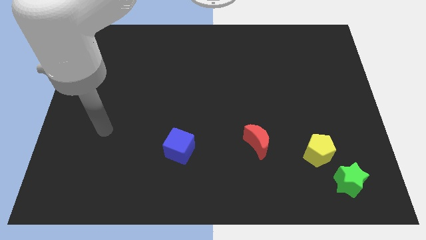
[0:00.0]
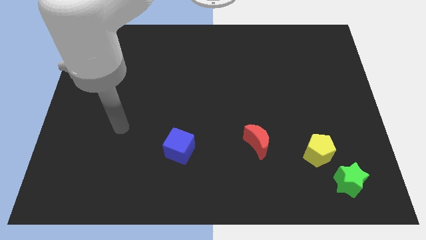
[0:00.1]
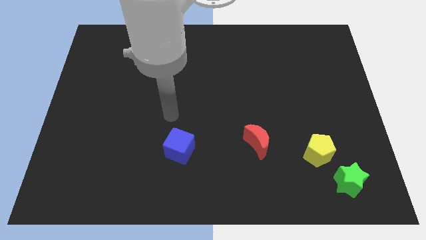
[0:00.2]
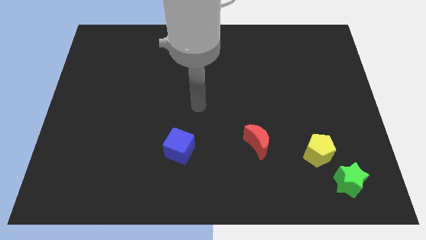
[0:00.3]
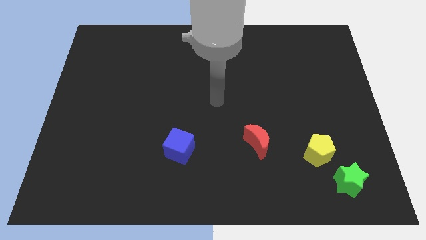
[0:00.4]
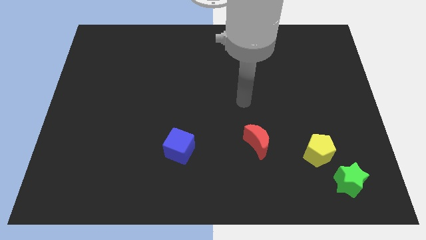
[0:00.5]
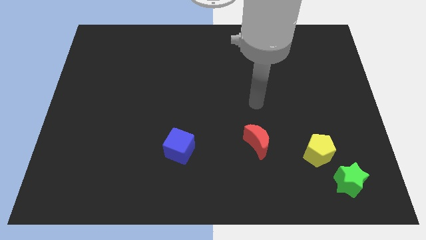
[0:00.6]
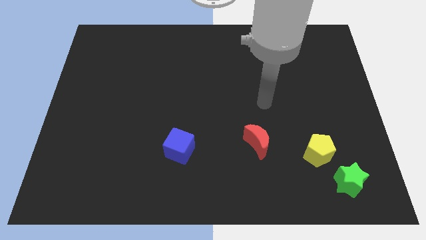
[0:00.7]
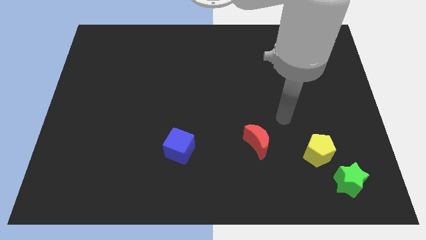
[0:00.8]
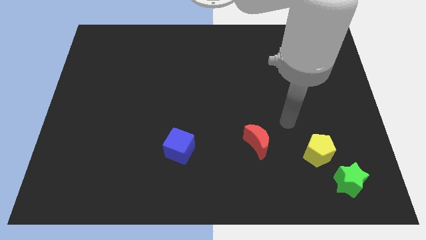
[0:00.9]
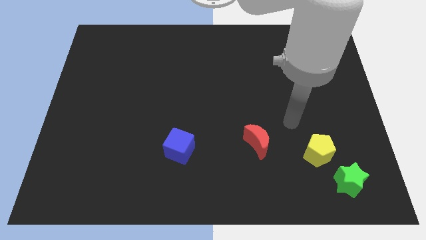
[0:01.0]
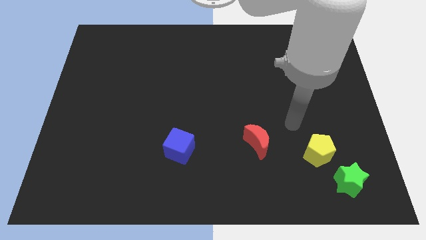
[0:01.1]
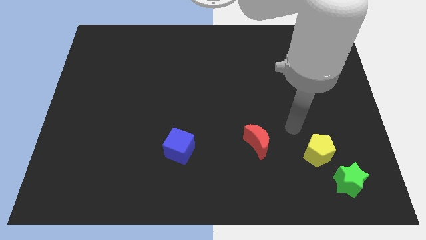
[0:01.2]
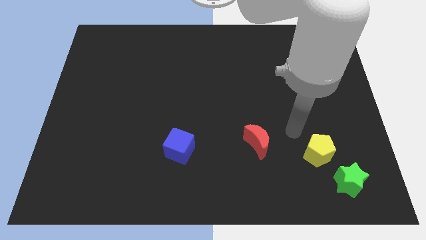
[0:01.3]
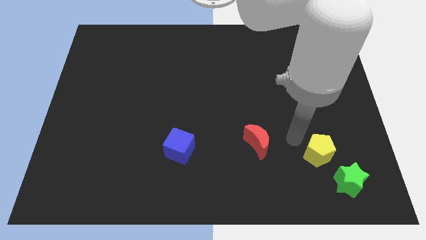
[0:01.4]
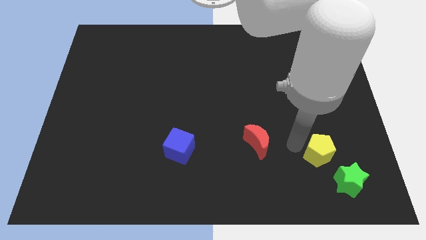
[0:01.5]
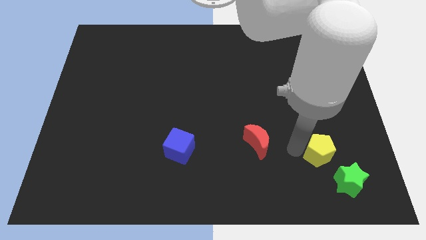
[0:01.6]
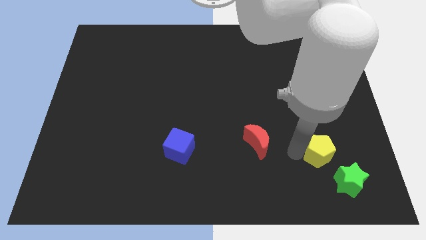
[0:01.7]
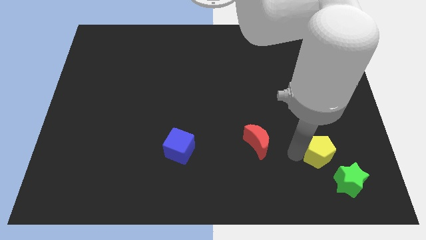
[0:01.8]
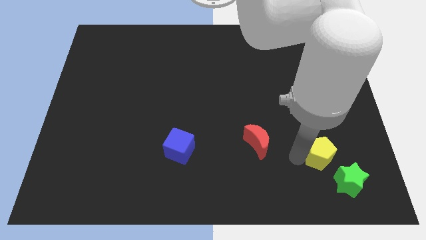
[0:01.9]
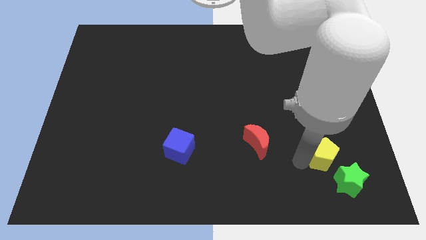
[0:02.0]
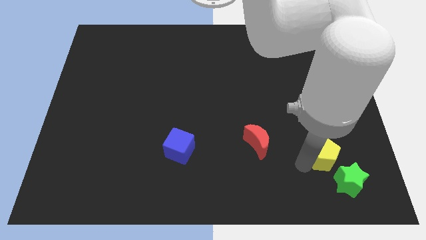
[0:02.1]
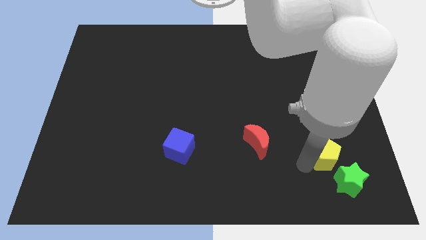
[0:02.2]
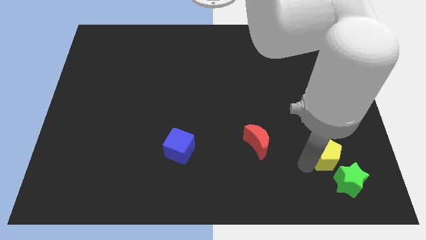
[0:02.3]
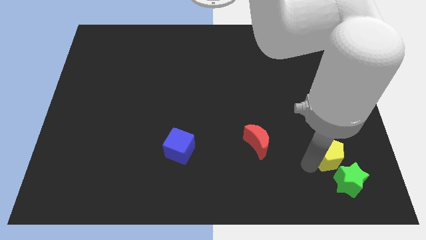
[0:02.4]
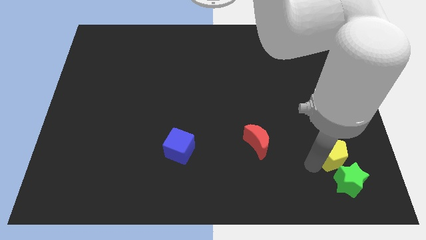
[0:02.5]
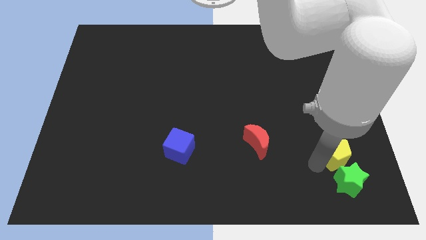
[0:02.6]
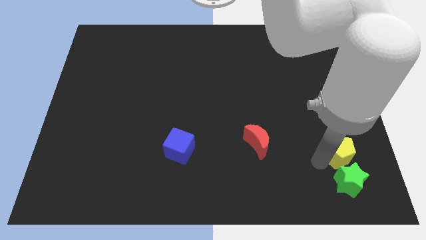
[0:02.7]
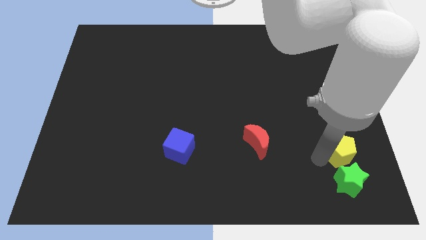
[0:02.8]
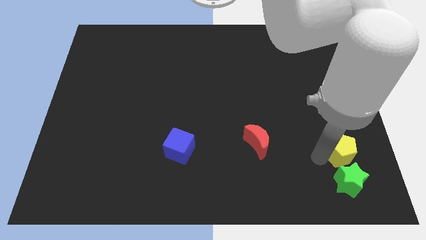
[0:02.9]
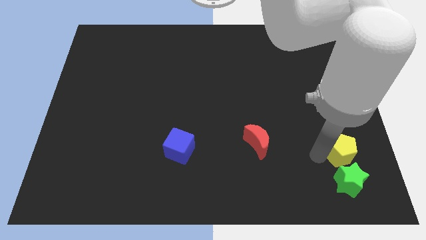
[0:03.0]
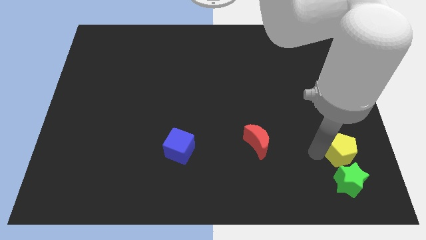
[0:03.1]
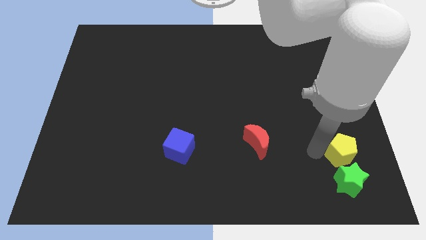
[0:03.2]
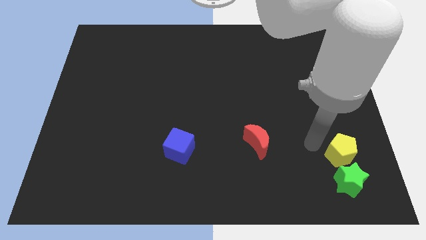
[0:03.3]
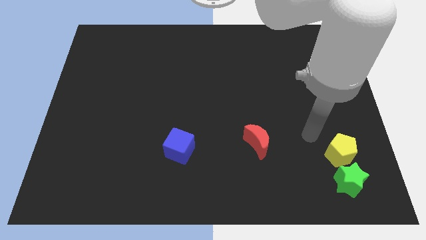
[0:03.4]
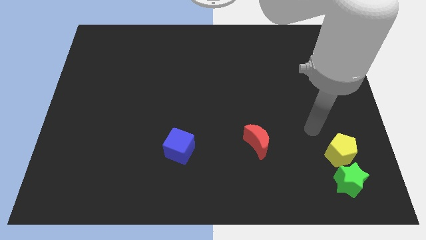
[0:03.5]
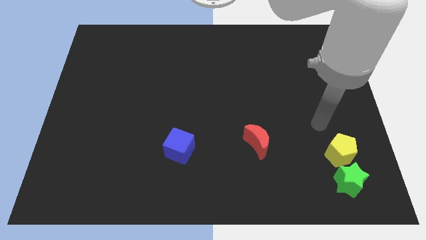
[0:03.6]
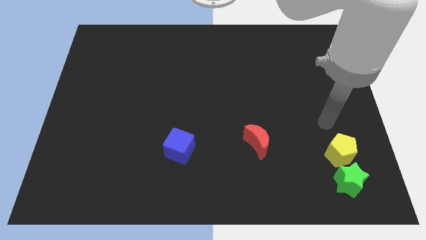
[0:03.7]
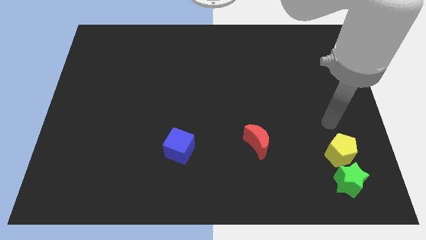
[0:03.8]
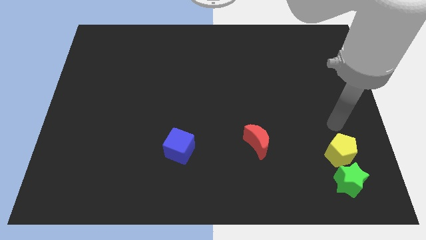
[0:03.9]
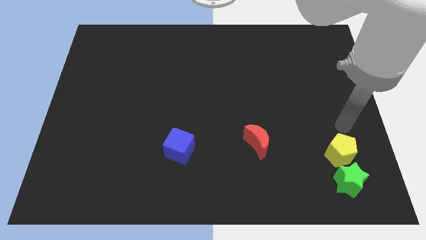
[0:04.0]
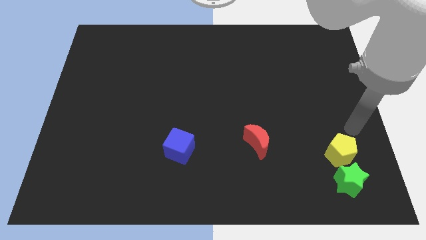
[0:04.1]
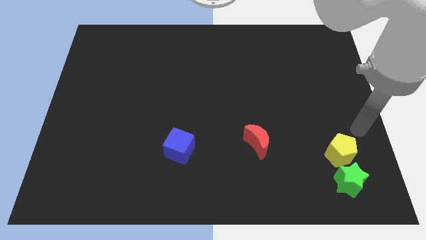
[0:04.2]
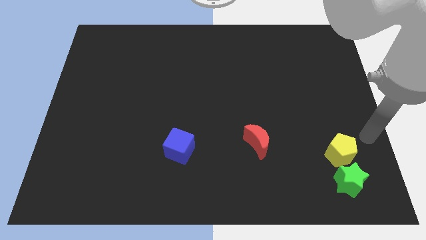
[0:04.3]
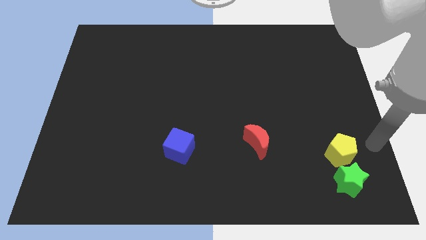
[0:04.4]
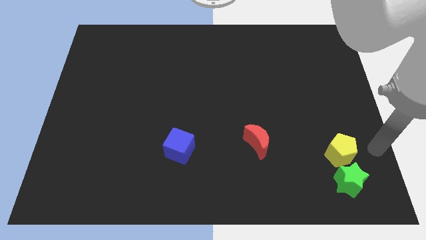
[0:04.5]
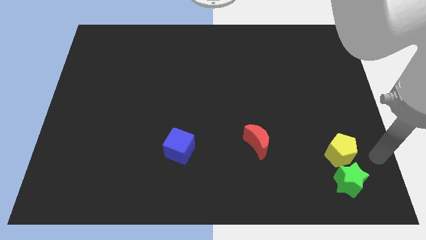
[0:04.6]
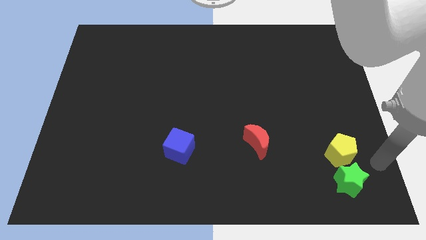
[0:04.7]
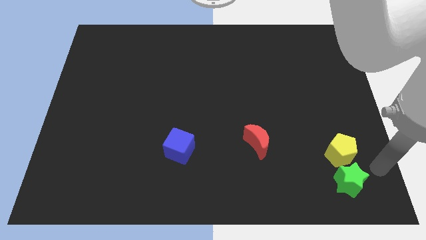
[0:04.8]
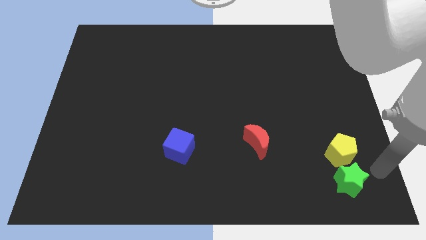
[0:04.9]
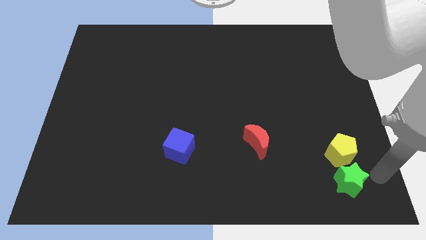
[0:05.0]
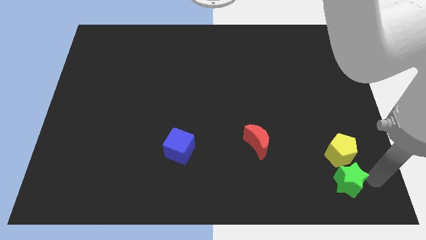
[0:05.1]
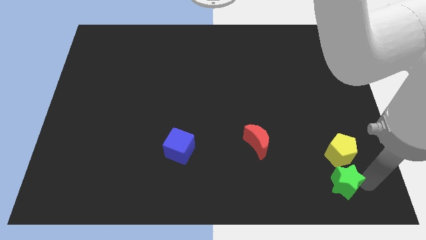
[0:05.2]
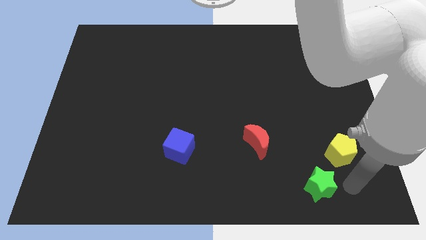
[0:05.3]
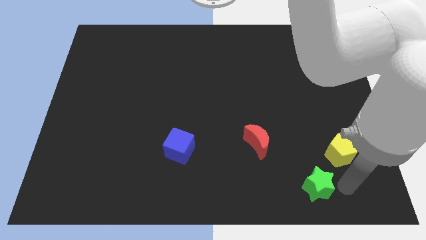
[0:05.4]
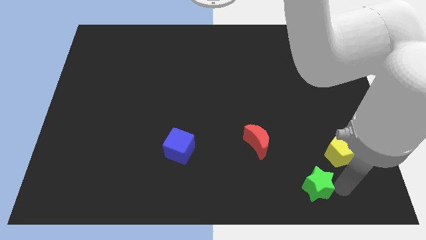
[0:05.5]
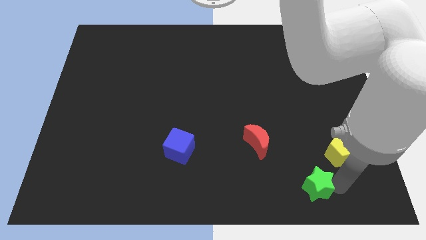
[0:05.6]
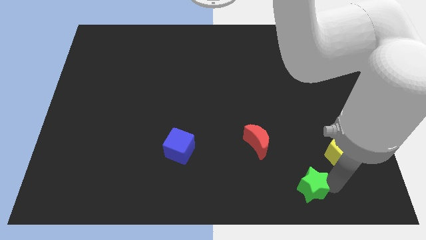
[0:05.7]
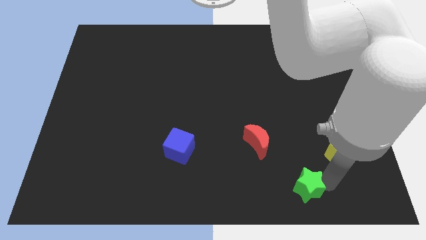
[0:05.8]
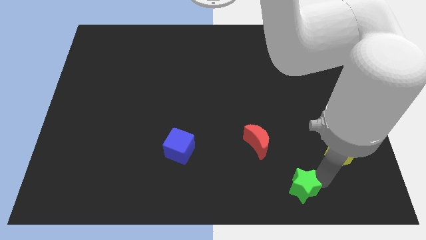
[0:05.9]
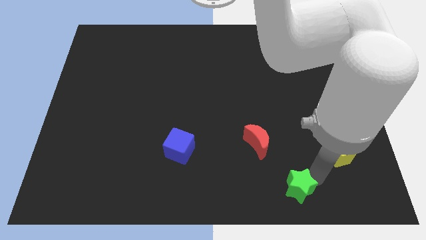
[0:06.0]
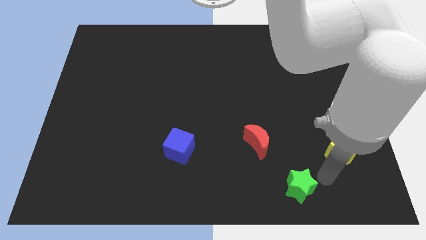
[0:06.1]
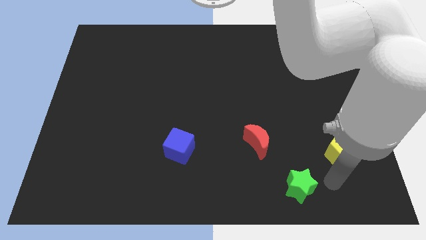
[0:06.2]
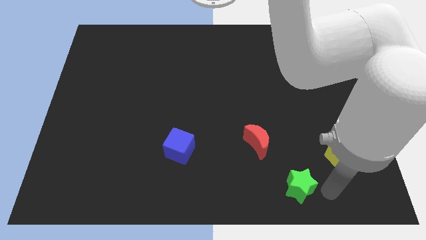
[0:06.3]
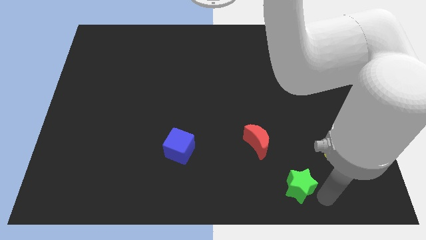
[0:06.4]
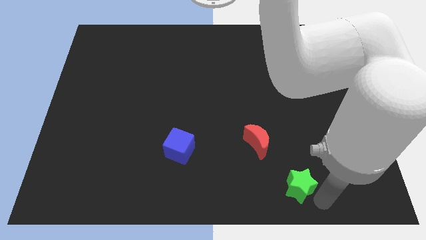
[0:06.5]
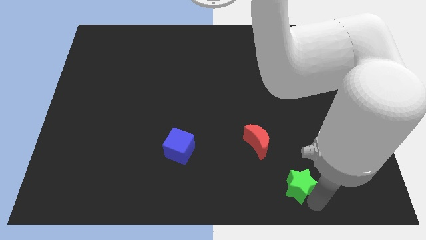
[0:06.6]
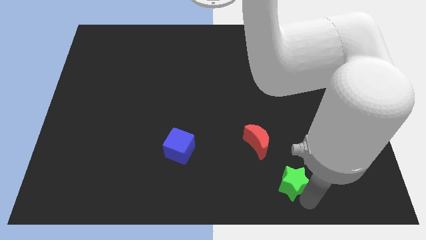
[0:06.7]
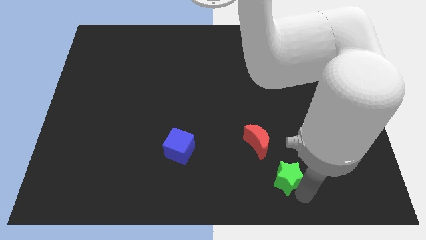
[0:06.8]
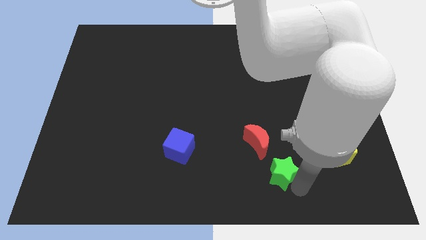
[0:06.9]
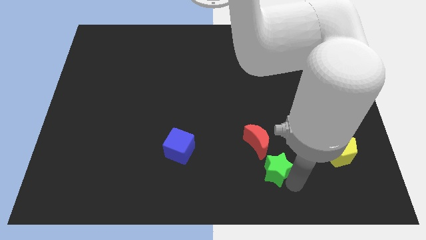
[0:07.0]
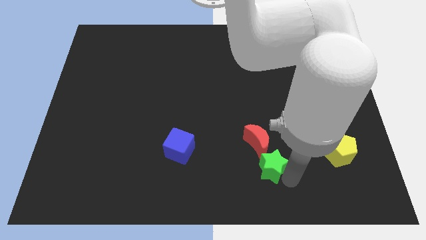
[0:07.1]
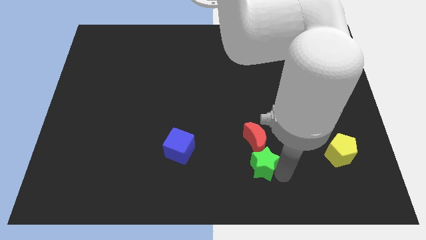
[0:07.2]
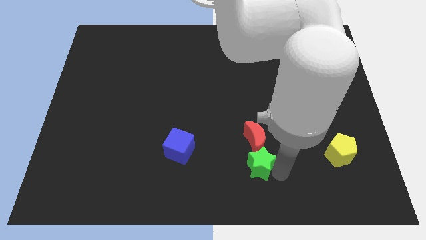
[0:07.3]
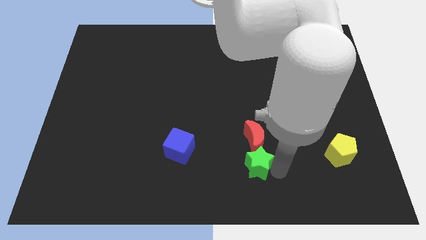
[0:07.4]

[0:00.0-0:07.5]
slide the green star to the moon

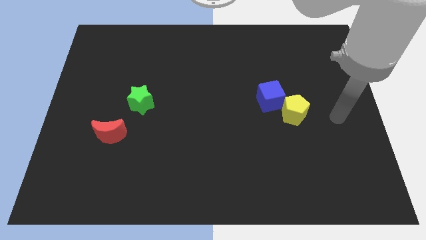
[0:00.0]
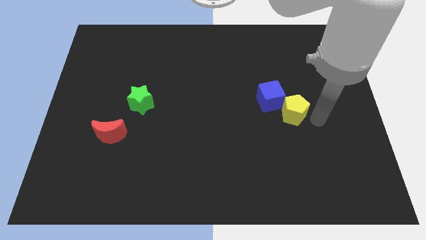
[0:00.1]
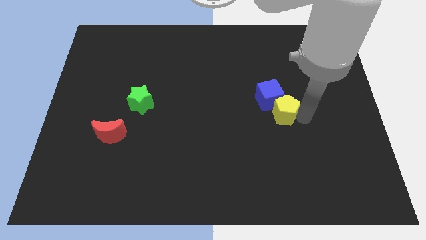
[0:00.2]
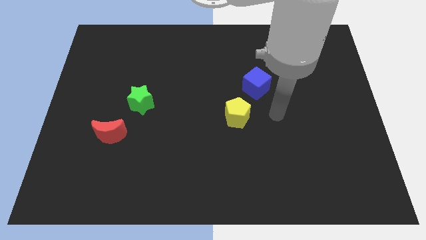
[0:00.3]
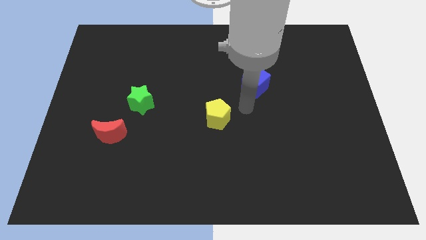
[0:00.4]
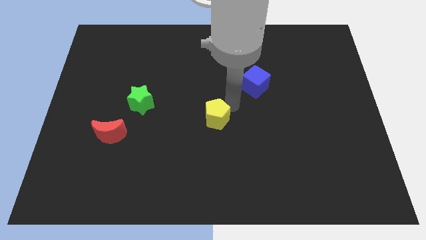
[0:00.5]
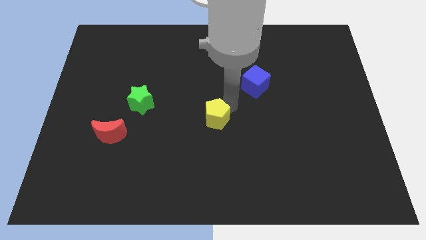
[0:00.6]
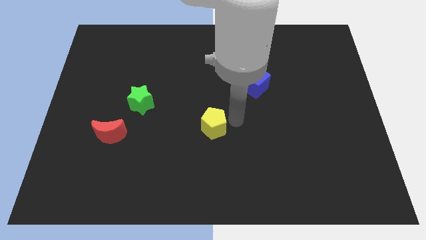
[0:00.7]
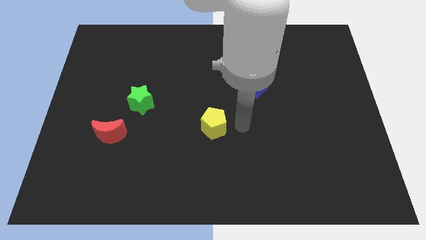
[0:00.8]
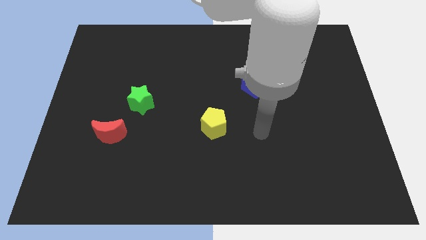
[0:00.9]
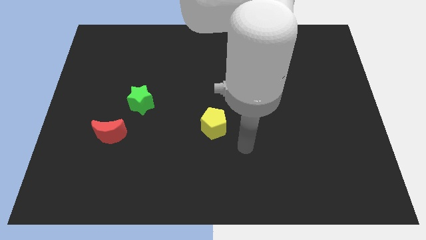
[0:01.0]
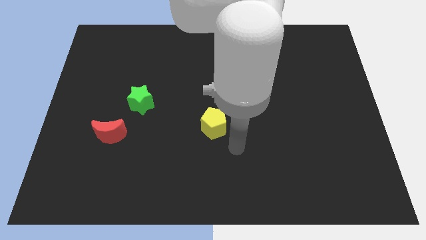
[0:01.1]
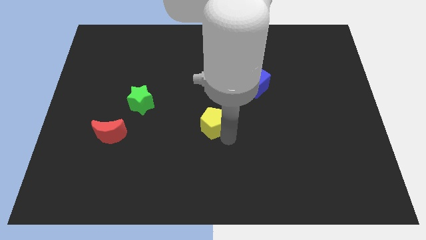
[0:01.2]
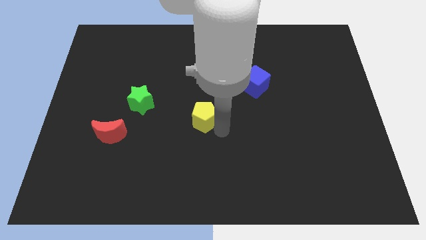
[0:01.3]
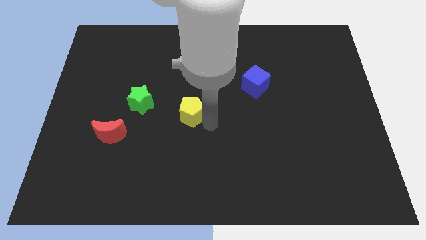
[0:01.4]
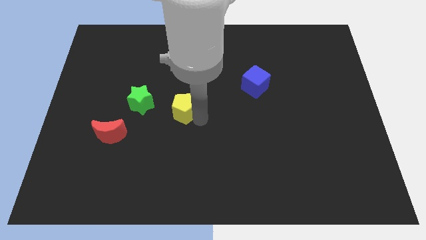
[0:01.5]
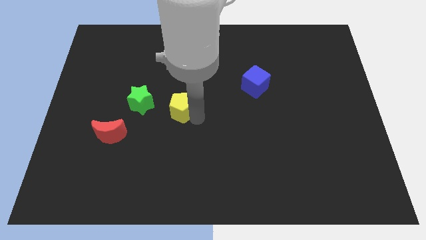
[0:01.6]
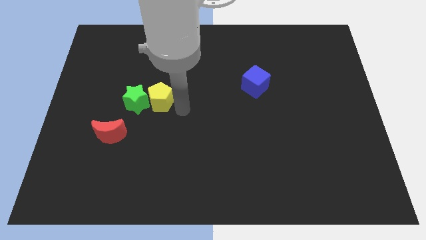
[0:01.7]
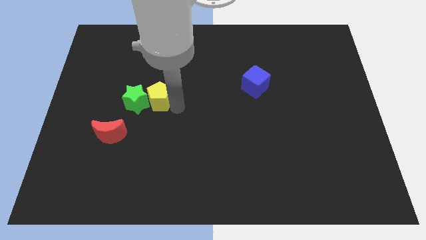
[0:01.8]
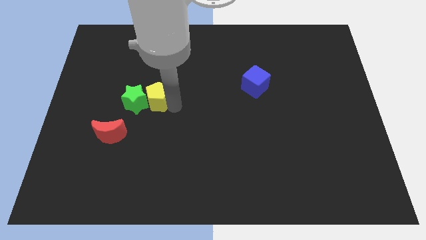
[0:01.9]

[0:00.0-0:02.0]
push the yellow block to the green block
